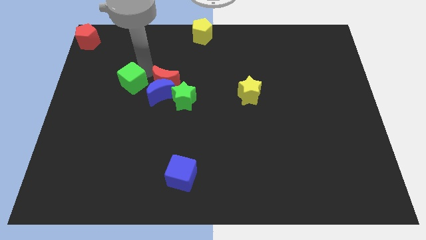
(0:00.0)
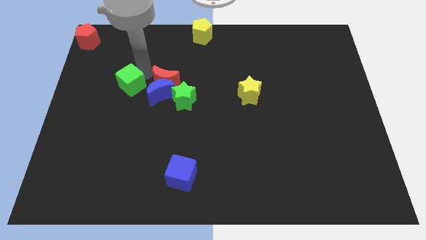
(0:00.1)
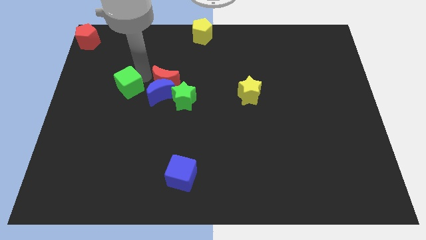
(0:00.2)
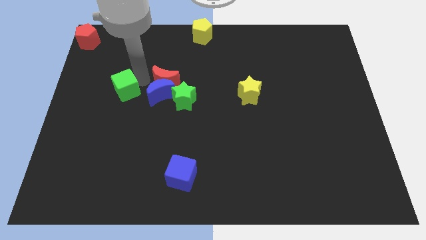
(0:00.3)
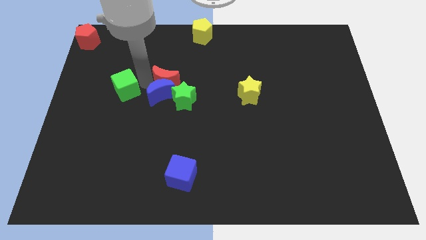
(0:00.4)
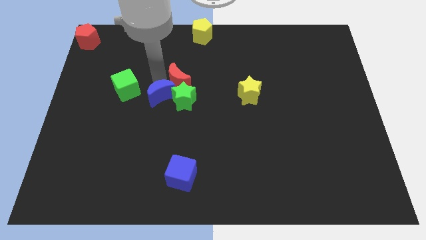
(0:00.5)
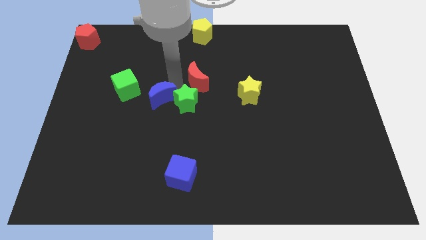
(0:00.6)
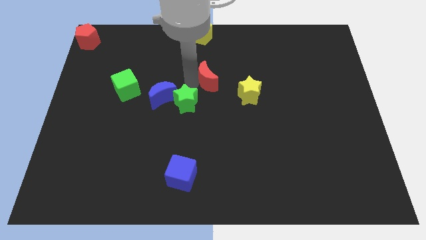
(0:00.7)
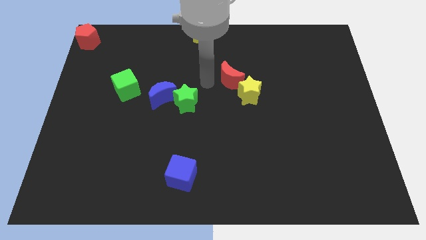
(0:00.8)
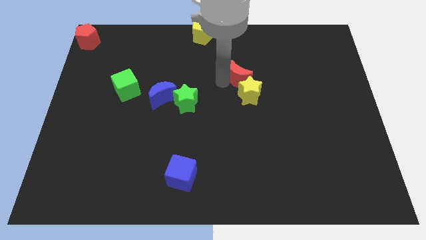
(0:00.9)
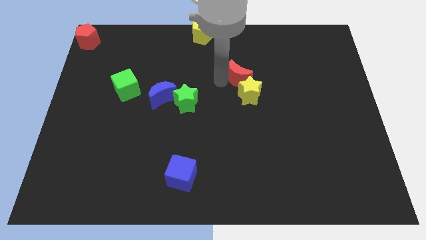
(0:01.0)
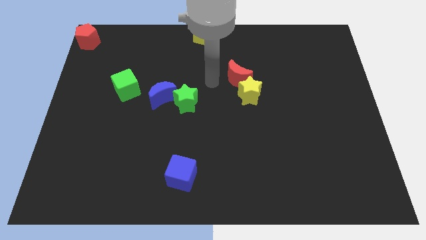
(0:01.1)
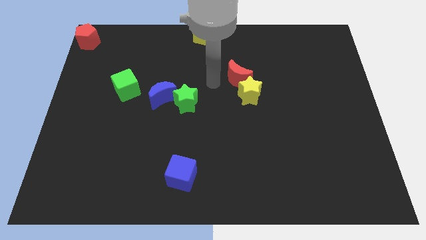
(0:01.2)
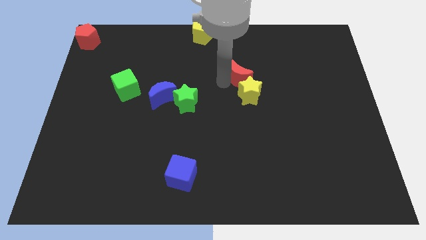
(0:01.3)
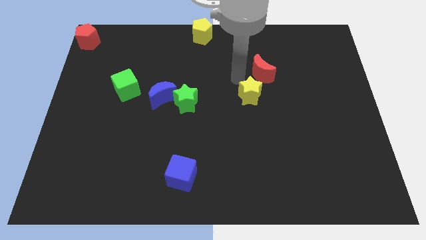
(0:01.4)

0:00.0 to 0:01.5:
move the red moon slightly to the right of the board

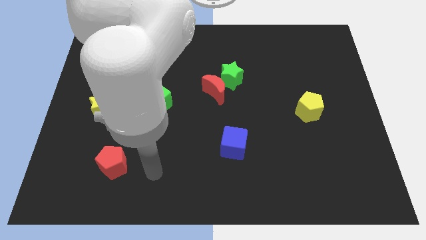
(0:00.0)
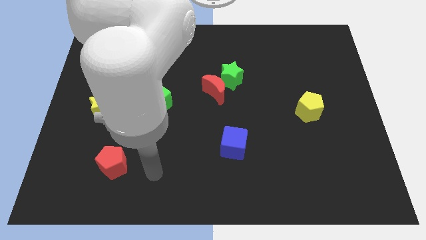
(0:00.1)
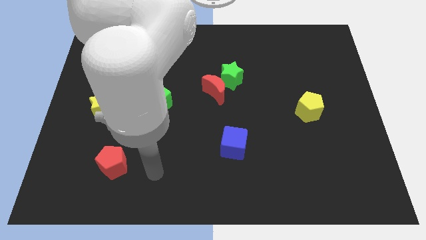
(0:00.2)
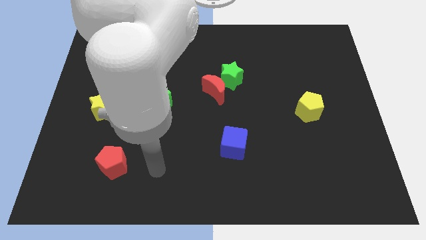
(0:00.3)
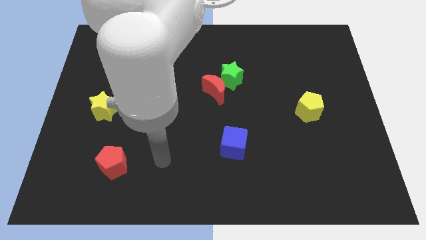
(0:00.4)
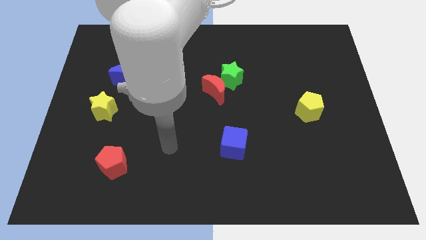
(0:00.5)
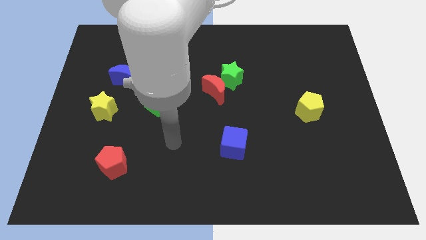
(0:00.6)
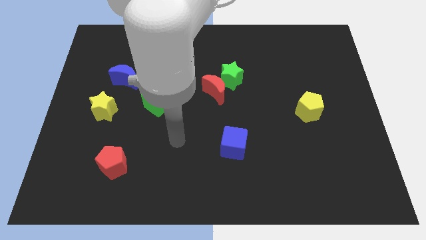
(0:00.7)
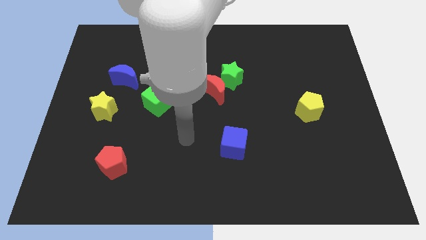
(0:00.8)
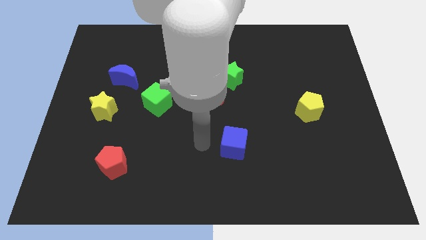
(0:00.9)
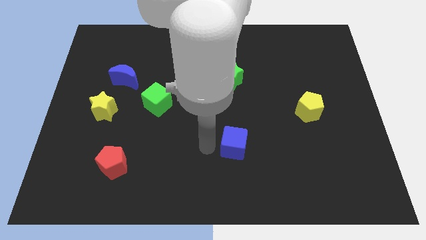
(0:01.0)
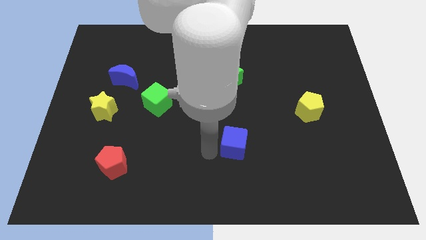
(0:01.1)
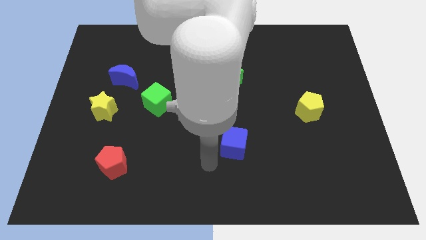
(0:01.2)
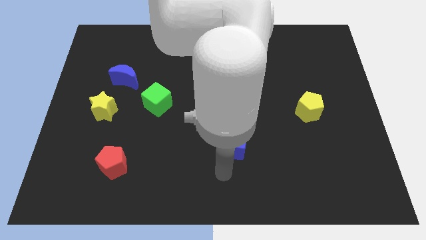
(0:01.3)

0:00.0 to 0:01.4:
move your arm to the bottom of the blue cube

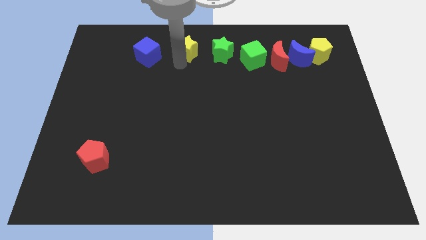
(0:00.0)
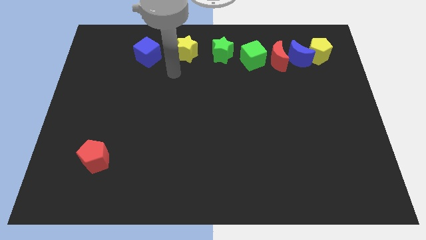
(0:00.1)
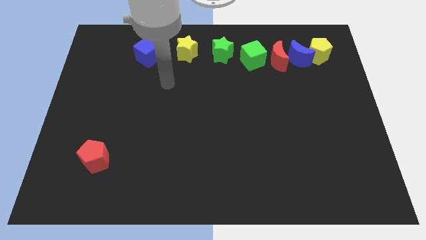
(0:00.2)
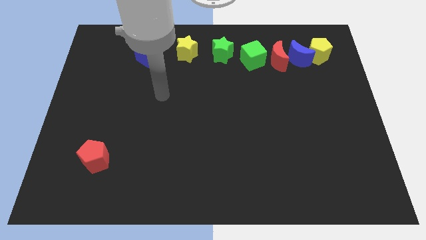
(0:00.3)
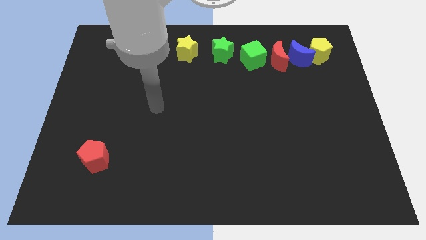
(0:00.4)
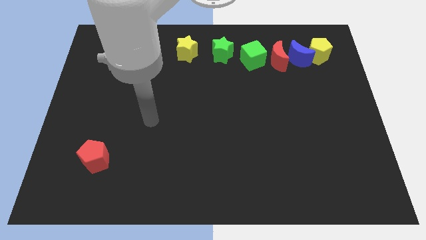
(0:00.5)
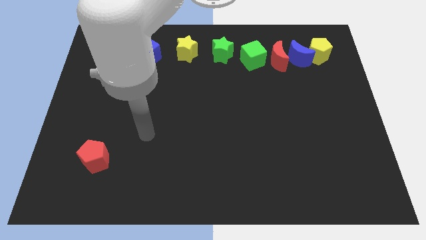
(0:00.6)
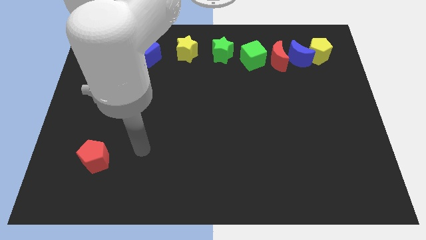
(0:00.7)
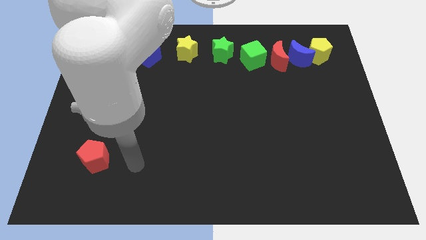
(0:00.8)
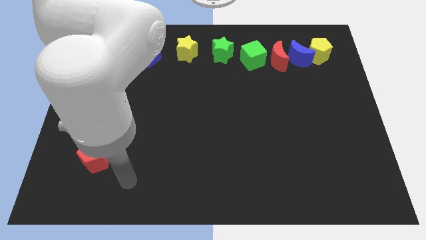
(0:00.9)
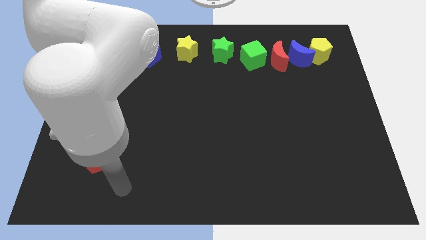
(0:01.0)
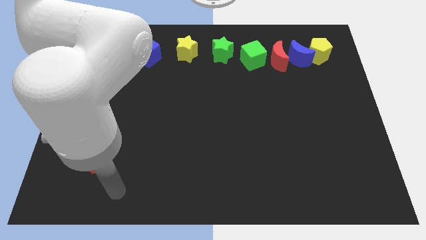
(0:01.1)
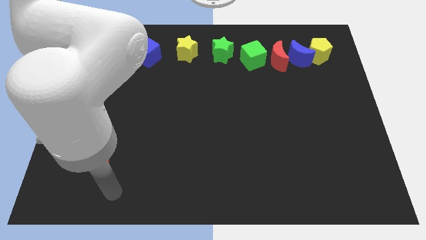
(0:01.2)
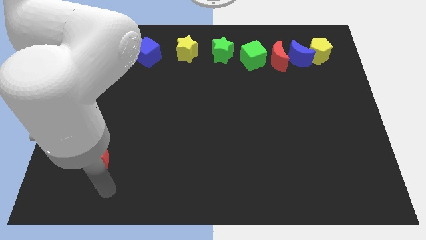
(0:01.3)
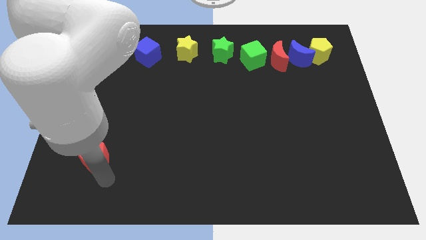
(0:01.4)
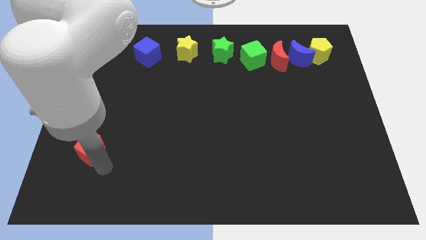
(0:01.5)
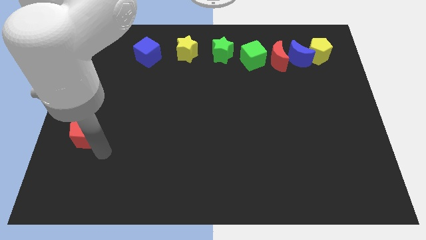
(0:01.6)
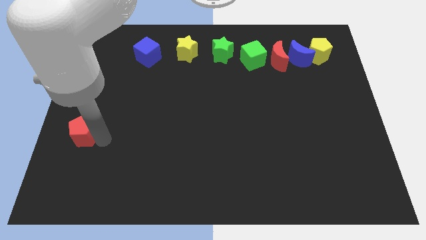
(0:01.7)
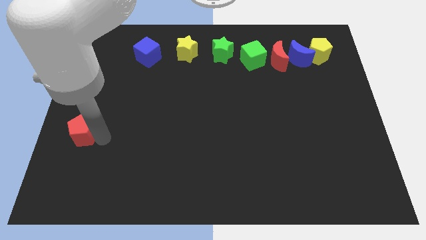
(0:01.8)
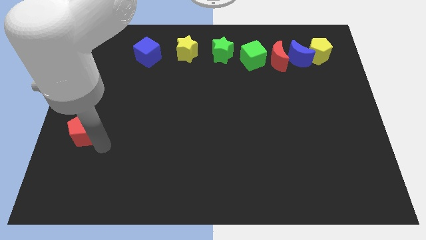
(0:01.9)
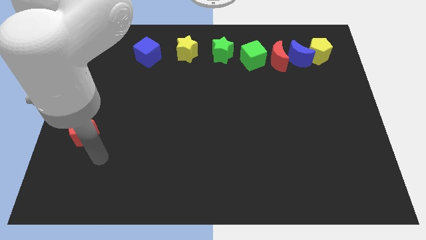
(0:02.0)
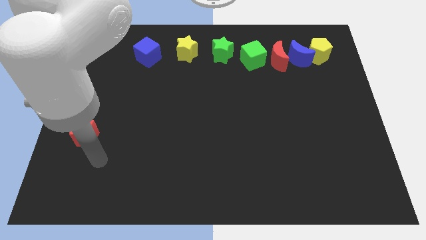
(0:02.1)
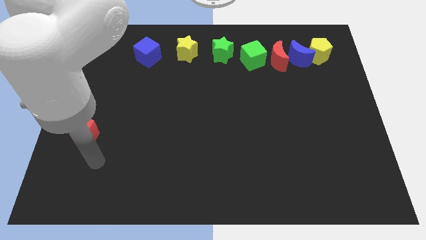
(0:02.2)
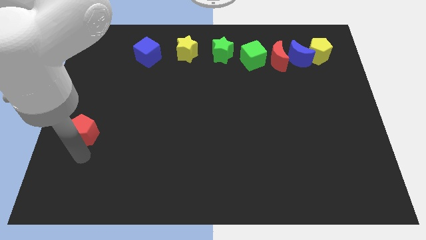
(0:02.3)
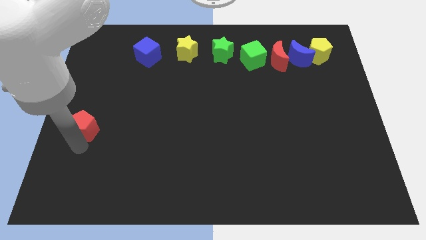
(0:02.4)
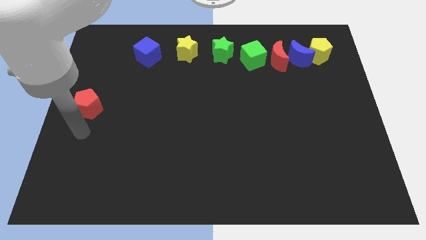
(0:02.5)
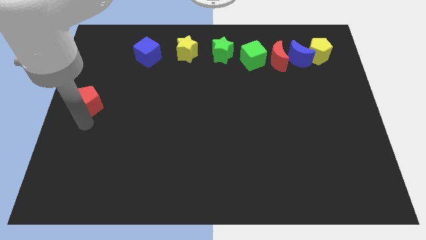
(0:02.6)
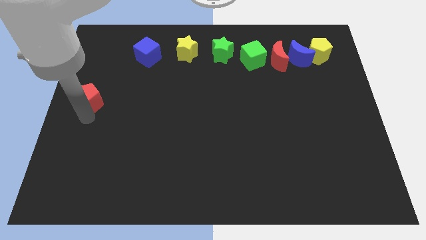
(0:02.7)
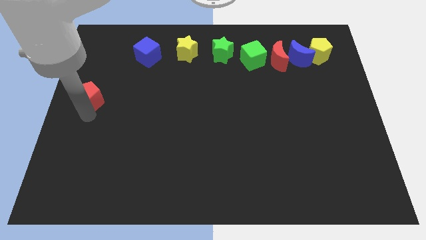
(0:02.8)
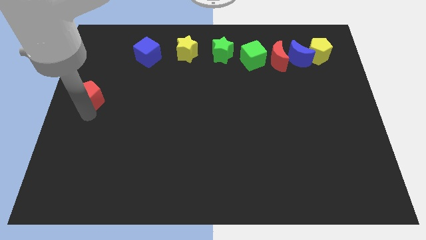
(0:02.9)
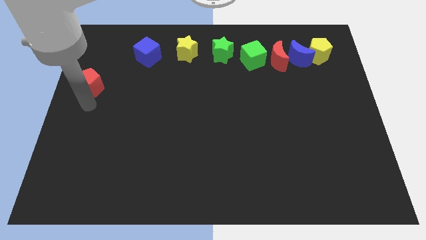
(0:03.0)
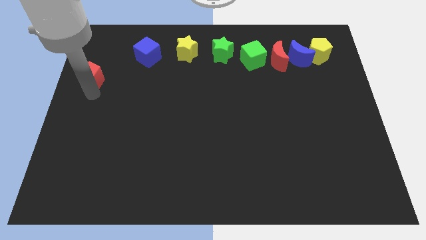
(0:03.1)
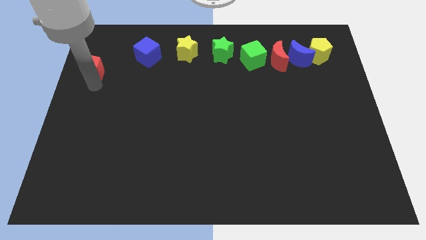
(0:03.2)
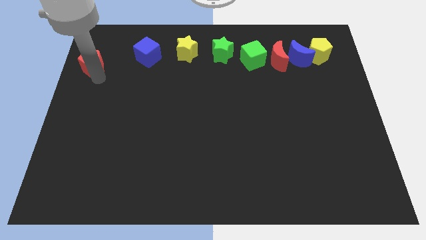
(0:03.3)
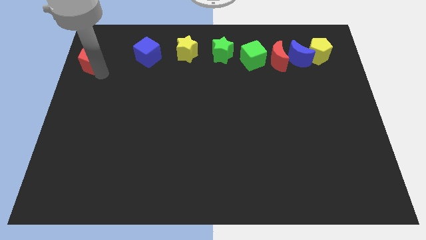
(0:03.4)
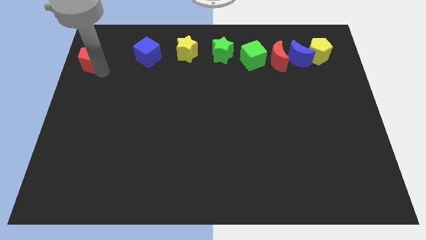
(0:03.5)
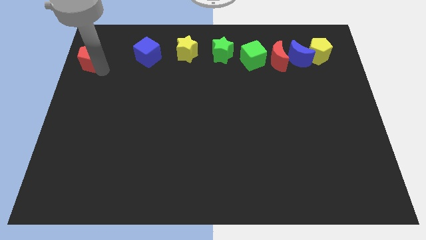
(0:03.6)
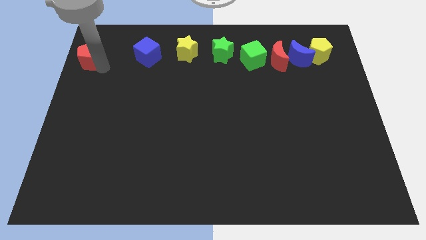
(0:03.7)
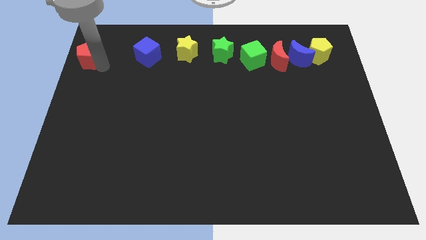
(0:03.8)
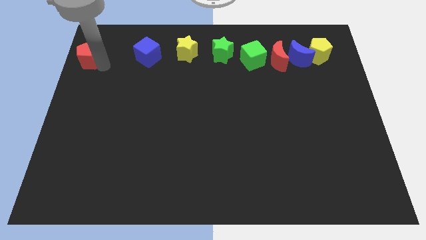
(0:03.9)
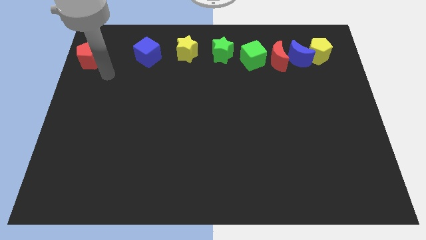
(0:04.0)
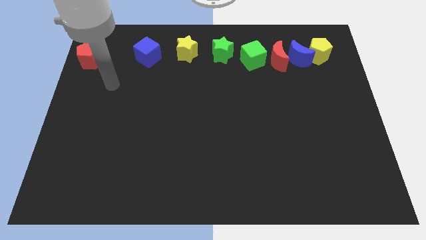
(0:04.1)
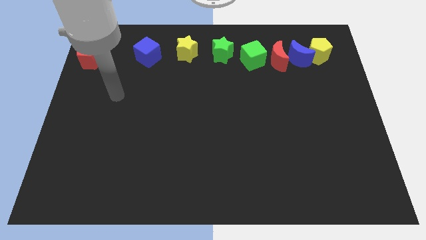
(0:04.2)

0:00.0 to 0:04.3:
place the red pentagon left to the blue cube

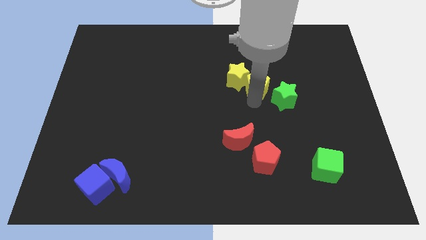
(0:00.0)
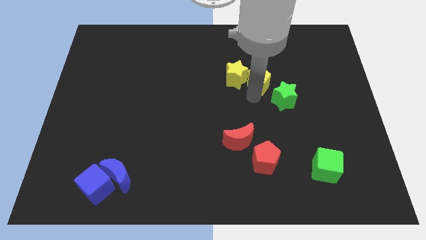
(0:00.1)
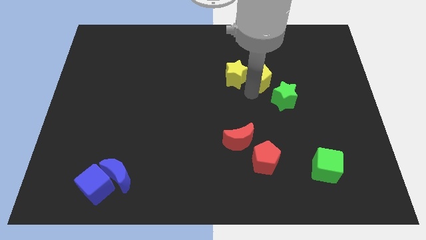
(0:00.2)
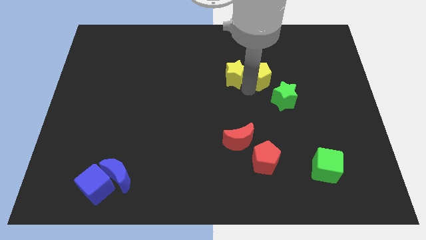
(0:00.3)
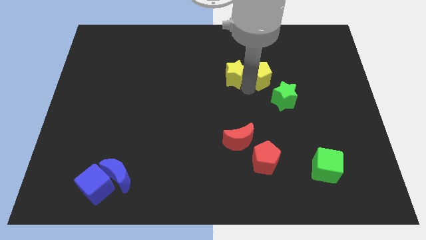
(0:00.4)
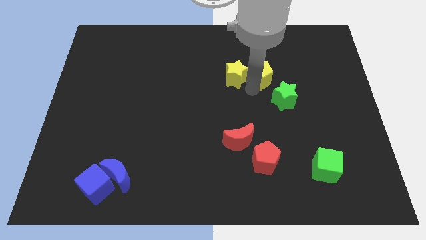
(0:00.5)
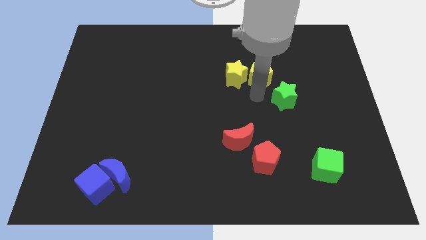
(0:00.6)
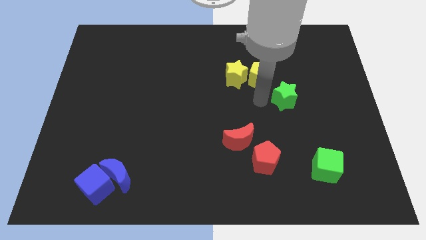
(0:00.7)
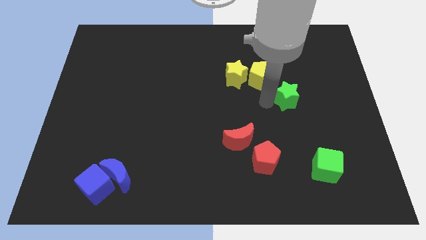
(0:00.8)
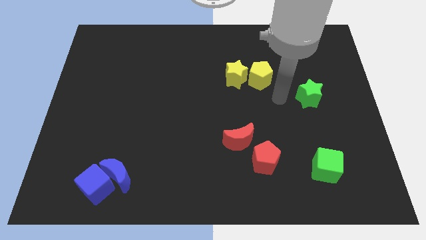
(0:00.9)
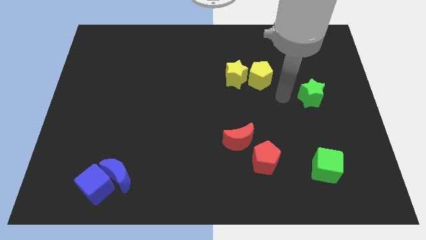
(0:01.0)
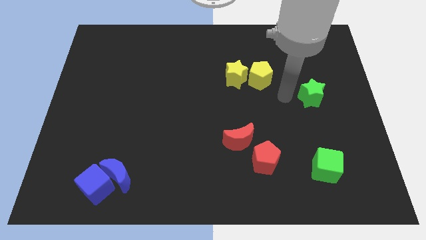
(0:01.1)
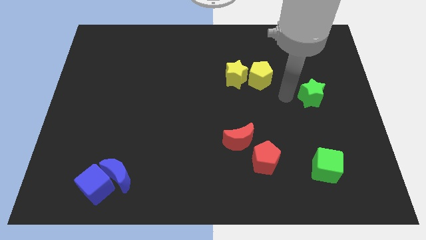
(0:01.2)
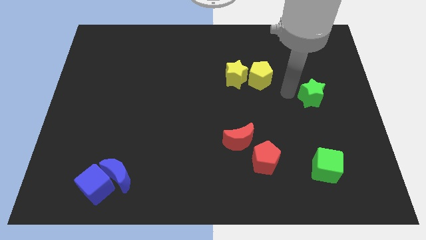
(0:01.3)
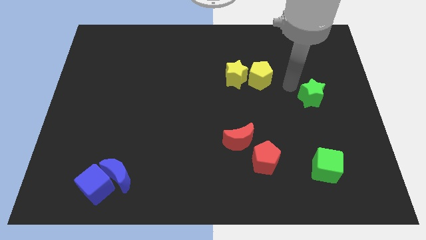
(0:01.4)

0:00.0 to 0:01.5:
place your arm in between the yellow pentagon and green star

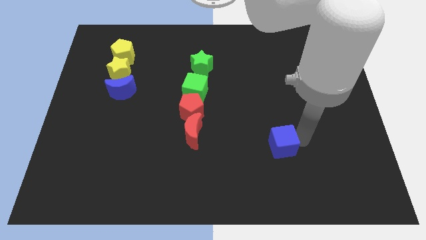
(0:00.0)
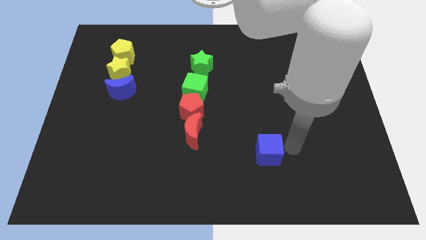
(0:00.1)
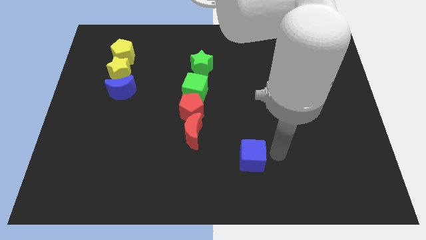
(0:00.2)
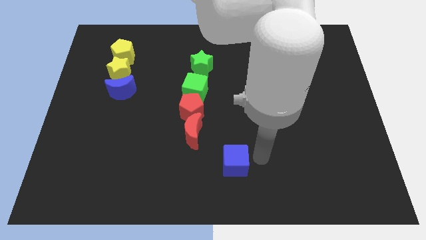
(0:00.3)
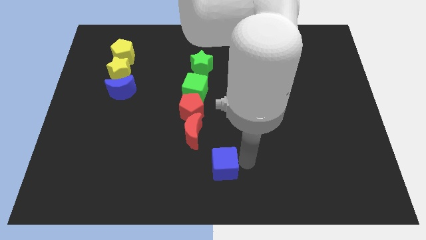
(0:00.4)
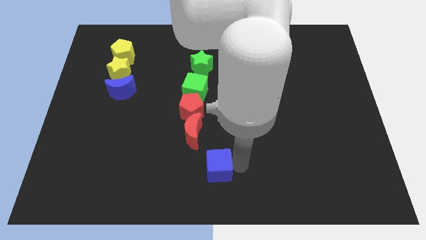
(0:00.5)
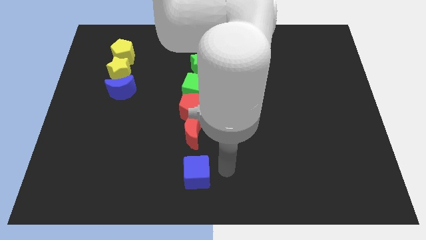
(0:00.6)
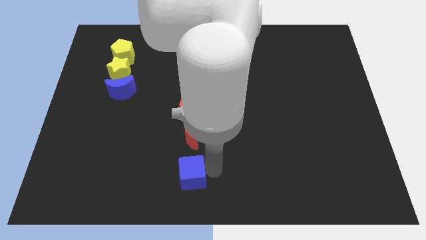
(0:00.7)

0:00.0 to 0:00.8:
move the blue cube to the left of the board
